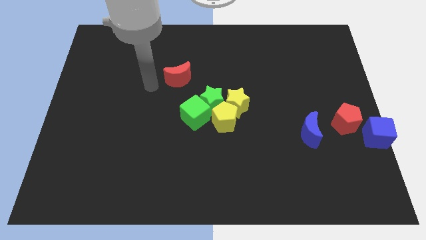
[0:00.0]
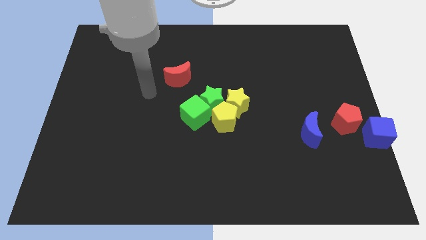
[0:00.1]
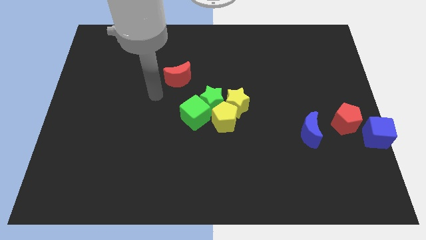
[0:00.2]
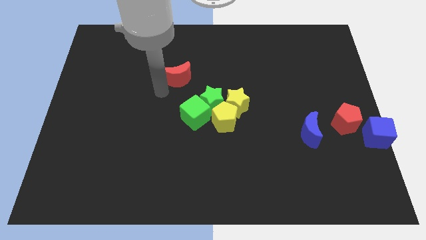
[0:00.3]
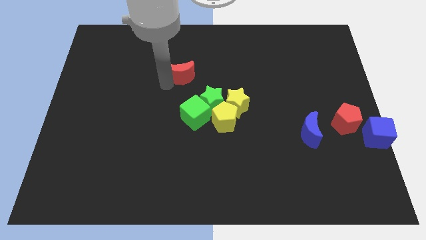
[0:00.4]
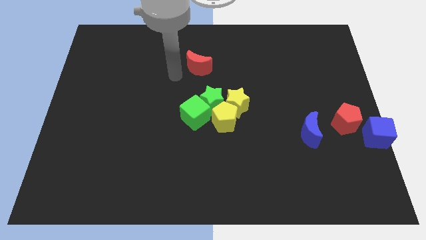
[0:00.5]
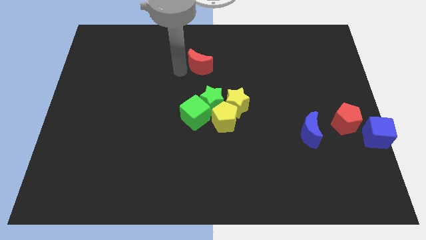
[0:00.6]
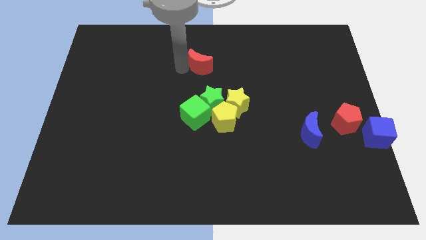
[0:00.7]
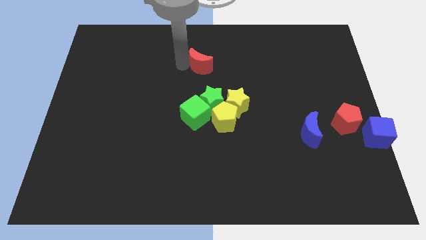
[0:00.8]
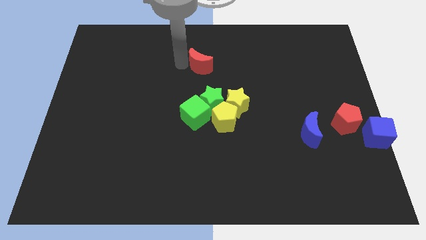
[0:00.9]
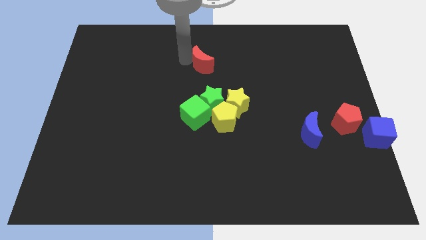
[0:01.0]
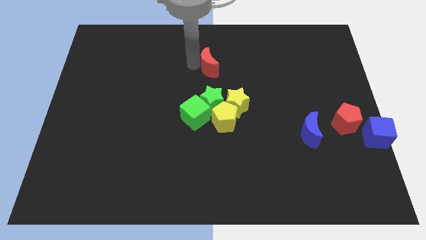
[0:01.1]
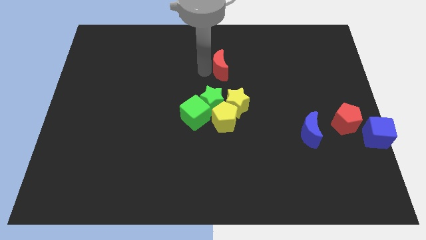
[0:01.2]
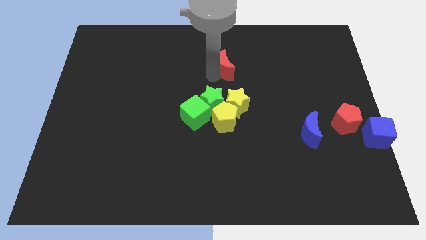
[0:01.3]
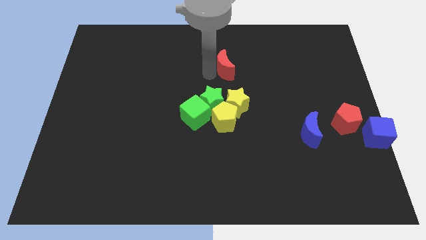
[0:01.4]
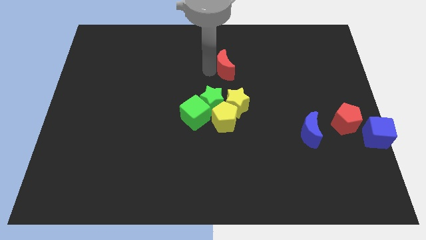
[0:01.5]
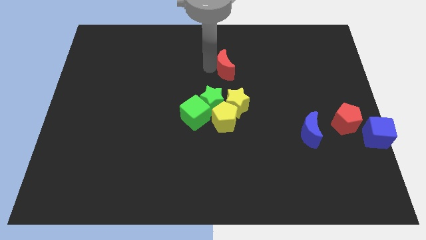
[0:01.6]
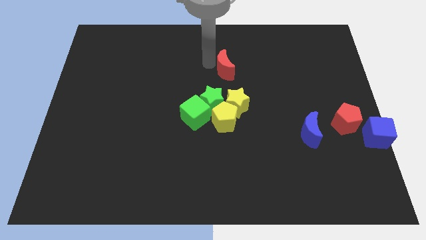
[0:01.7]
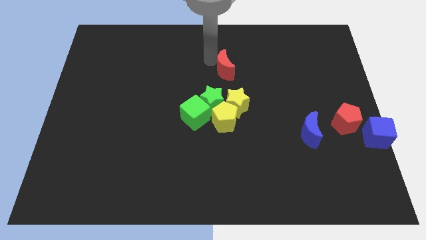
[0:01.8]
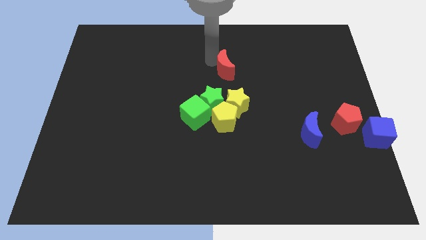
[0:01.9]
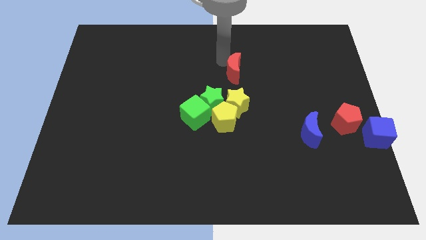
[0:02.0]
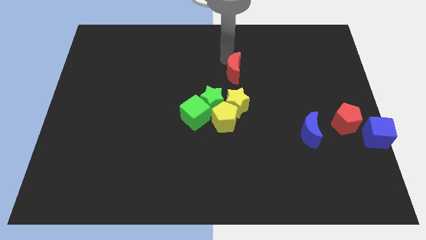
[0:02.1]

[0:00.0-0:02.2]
push the red crescent to the top of the yellow star

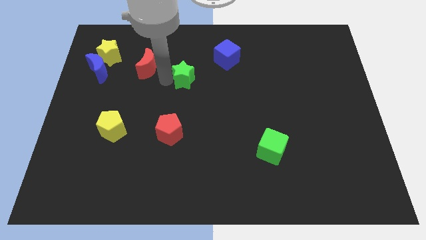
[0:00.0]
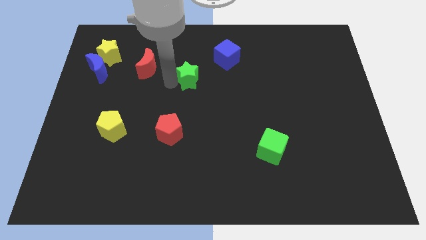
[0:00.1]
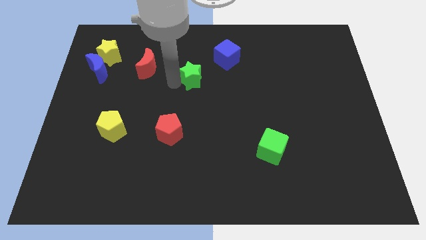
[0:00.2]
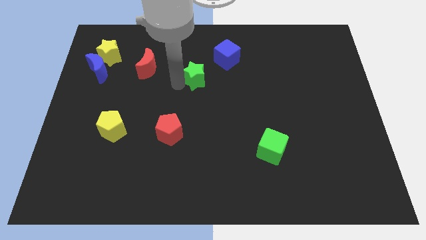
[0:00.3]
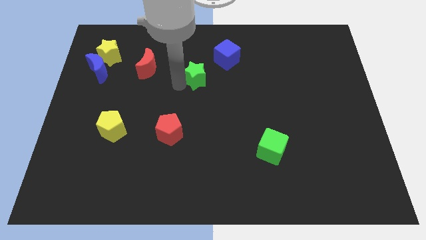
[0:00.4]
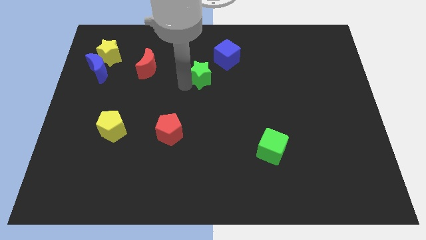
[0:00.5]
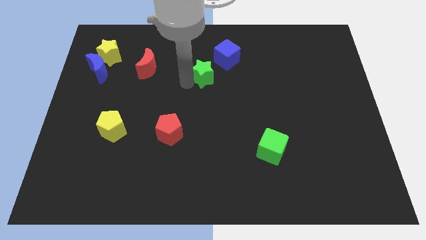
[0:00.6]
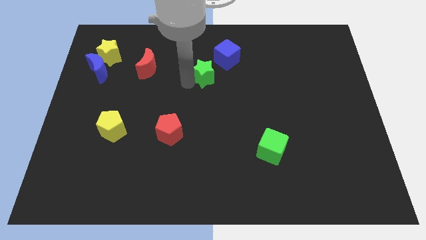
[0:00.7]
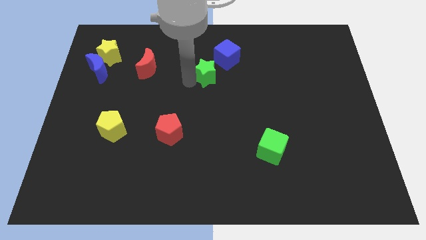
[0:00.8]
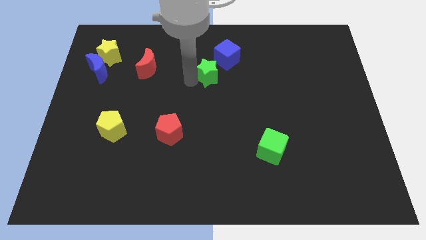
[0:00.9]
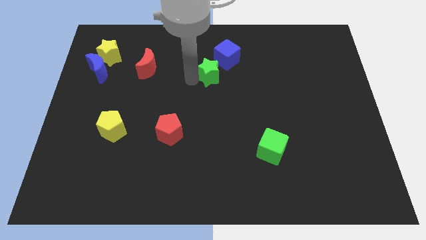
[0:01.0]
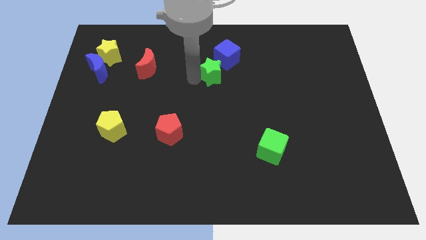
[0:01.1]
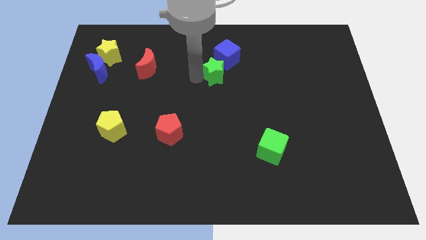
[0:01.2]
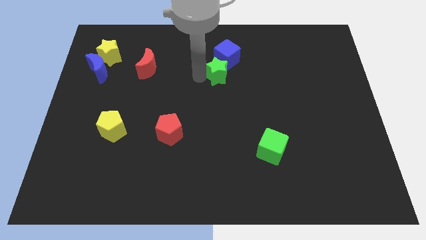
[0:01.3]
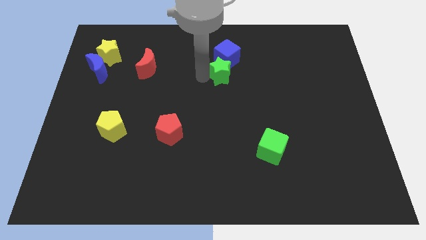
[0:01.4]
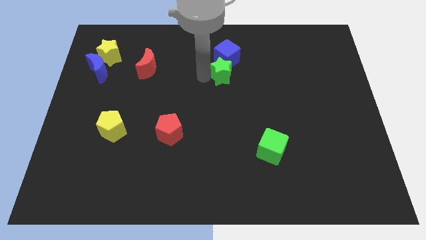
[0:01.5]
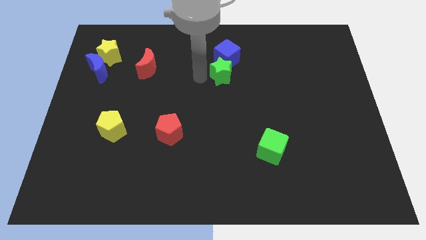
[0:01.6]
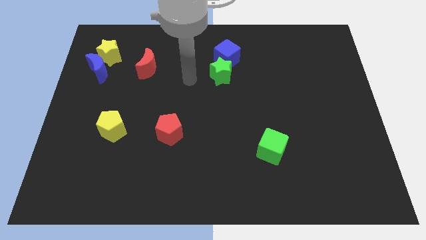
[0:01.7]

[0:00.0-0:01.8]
move the green star below the blue cube

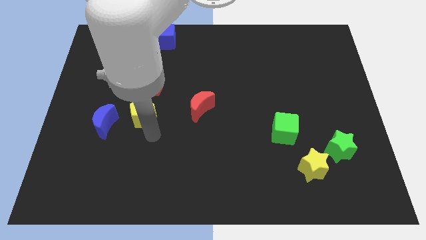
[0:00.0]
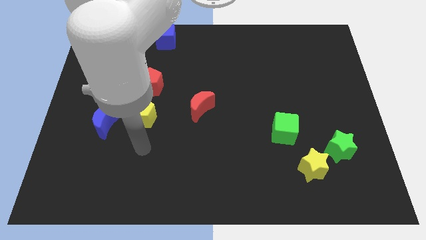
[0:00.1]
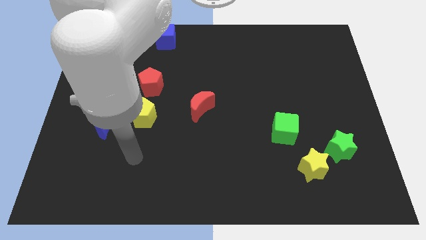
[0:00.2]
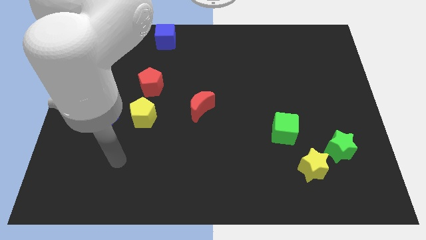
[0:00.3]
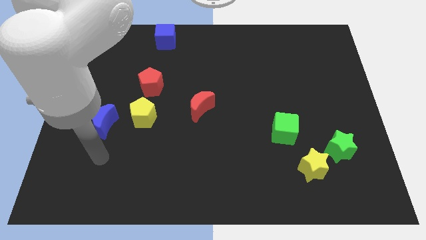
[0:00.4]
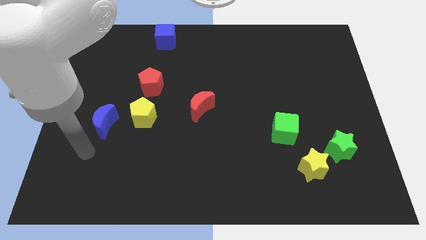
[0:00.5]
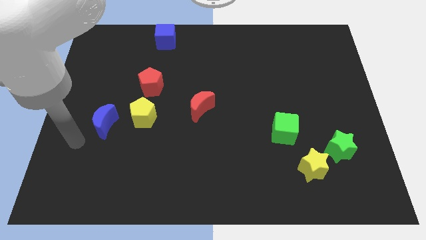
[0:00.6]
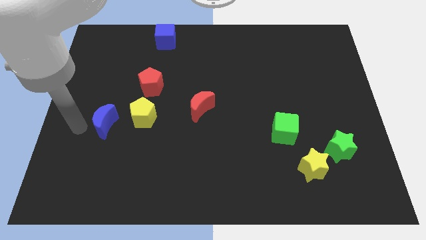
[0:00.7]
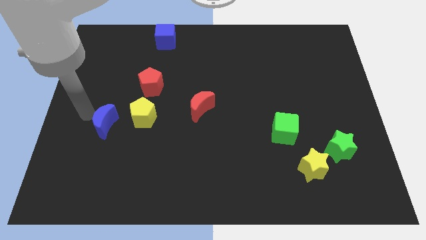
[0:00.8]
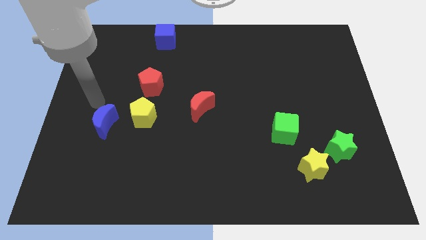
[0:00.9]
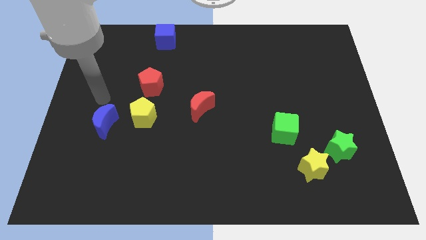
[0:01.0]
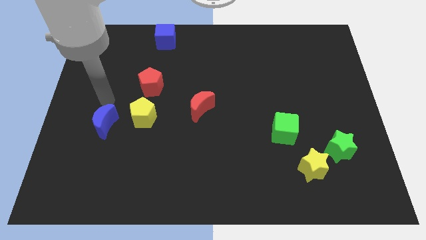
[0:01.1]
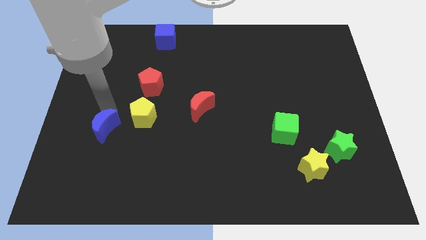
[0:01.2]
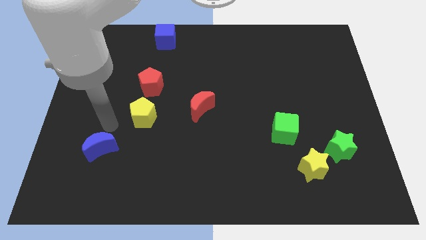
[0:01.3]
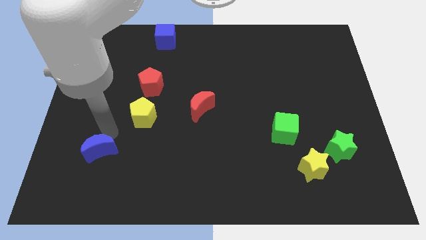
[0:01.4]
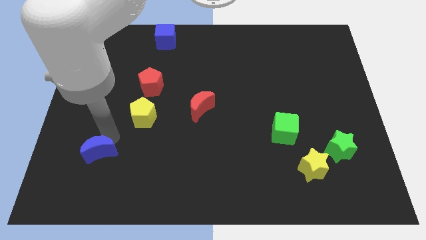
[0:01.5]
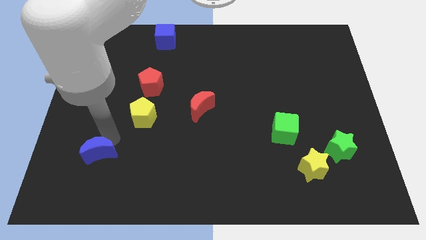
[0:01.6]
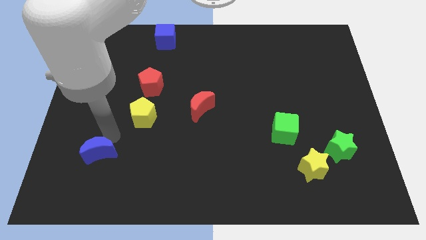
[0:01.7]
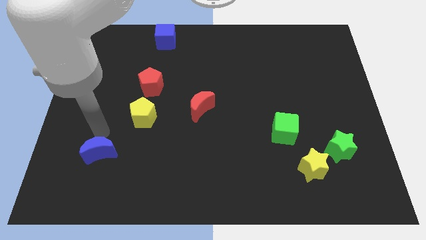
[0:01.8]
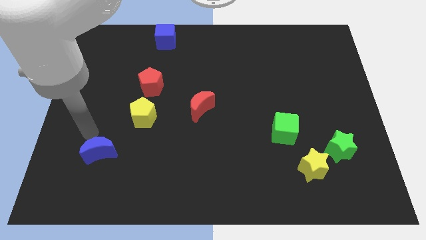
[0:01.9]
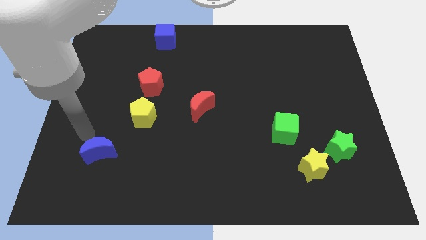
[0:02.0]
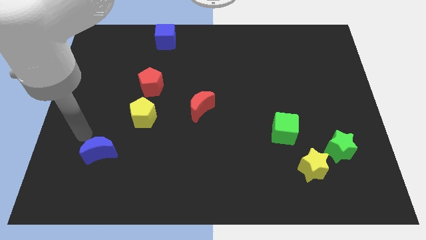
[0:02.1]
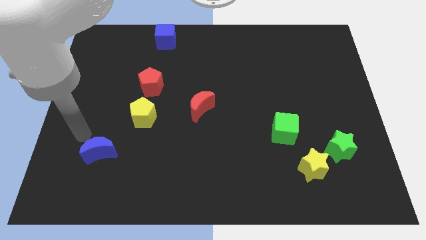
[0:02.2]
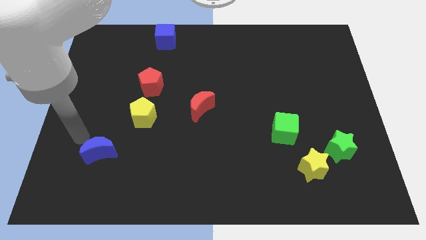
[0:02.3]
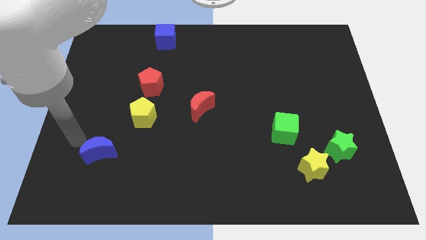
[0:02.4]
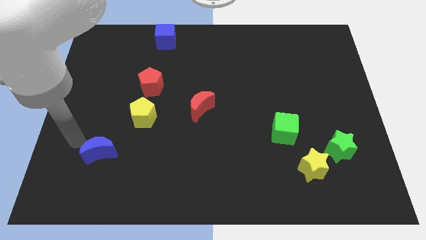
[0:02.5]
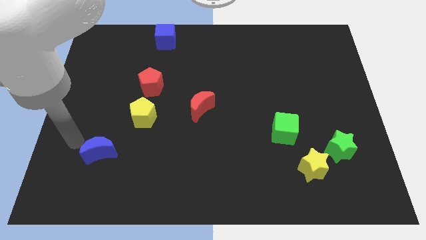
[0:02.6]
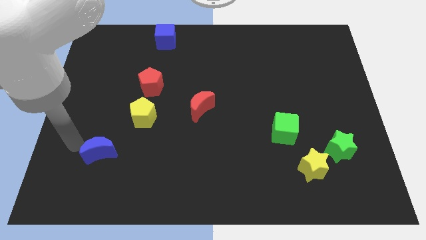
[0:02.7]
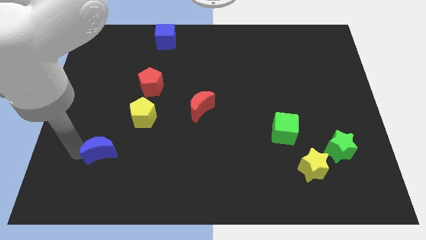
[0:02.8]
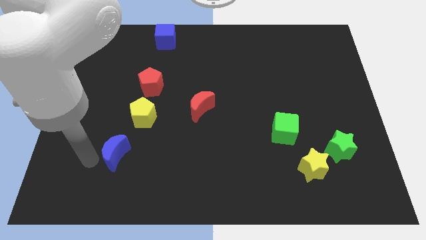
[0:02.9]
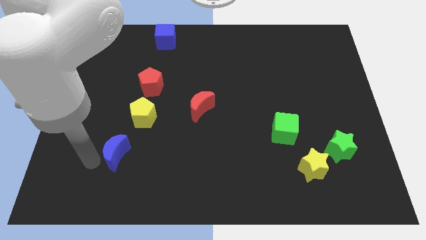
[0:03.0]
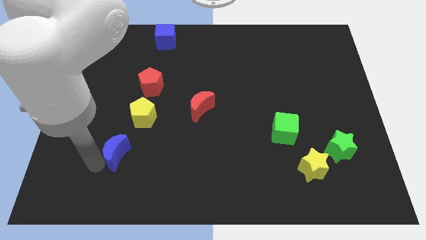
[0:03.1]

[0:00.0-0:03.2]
push the blue moon downward

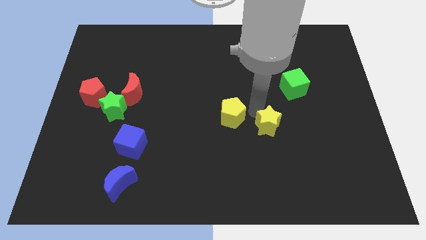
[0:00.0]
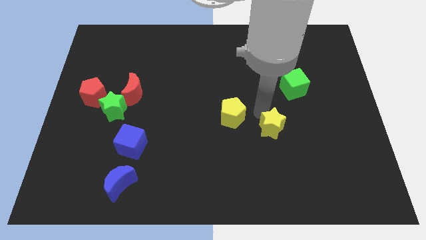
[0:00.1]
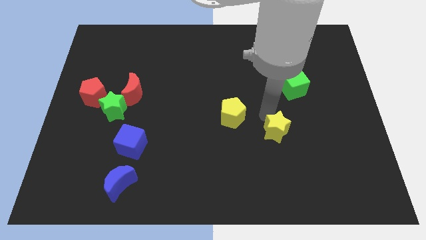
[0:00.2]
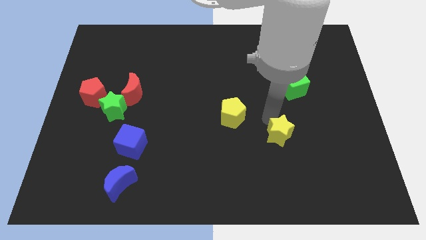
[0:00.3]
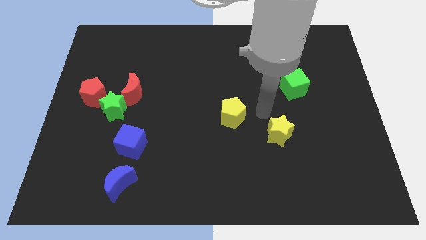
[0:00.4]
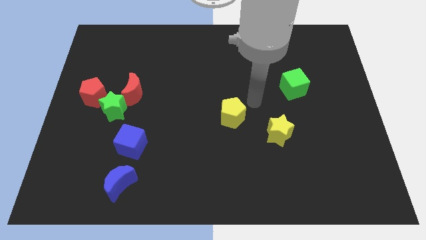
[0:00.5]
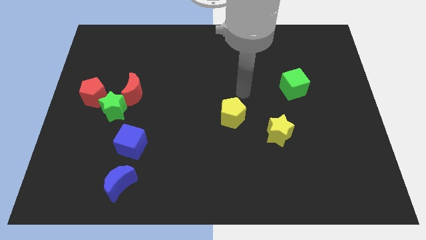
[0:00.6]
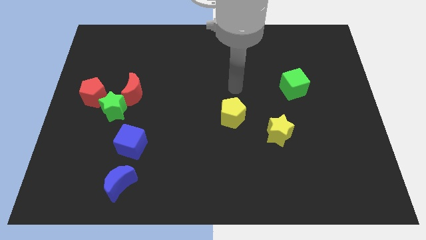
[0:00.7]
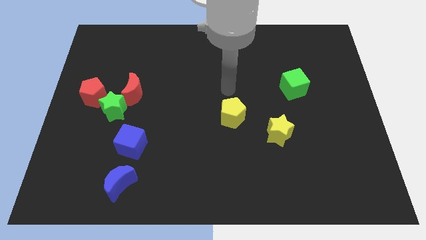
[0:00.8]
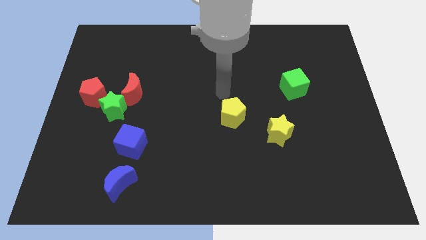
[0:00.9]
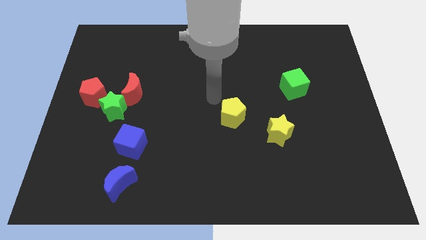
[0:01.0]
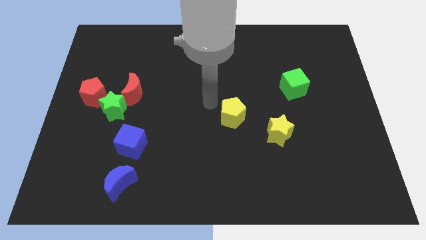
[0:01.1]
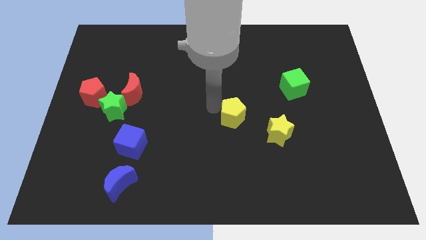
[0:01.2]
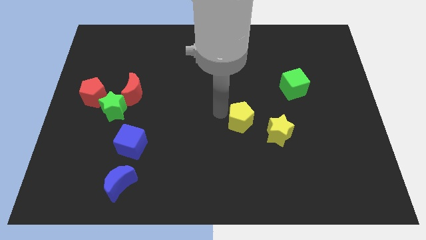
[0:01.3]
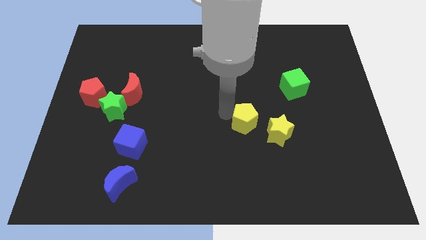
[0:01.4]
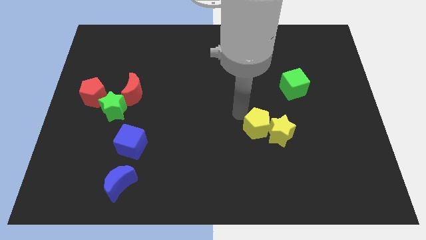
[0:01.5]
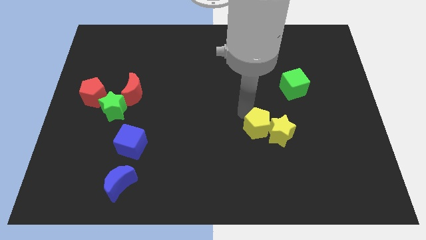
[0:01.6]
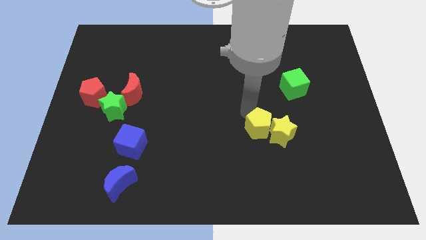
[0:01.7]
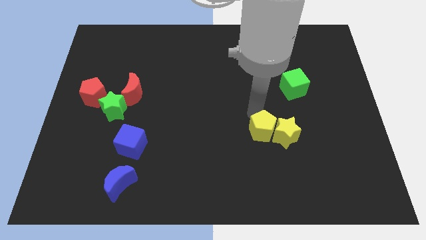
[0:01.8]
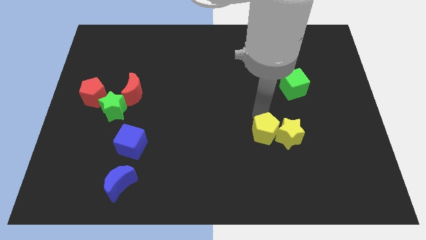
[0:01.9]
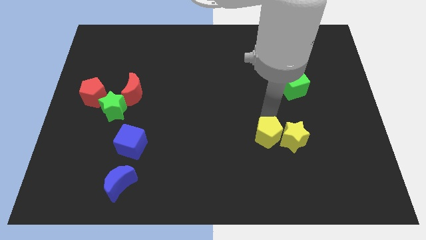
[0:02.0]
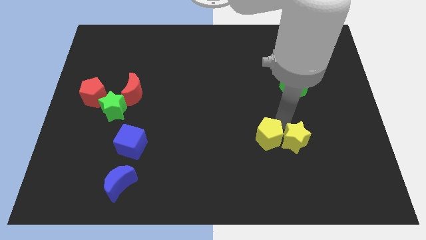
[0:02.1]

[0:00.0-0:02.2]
push the yellow pentagon into the yellow star
